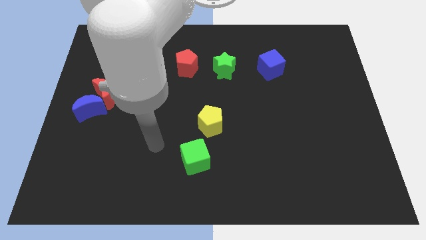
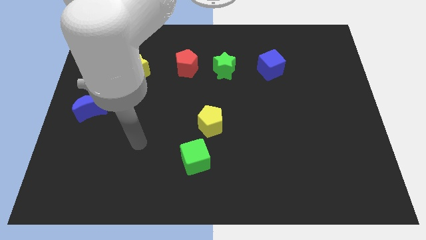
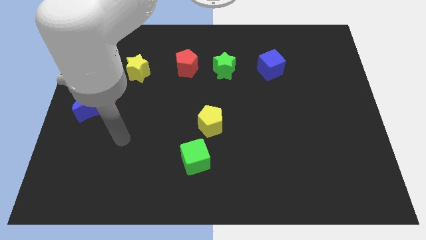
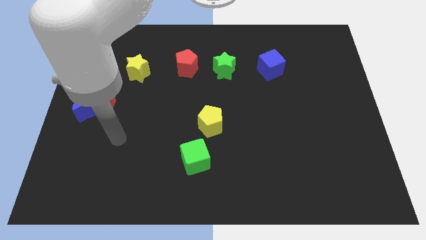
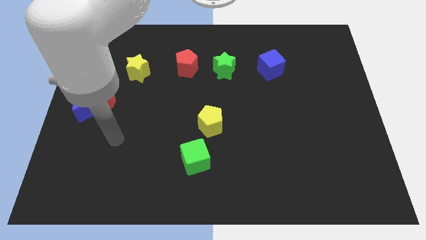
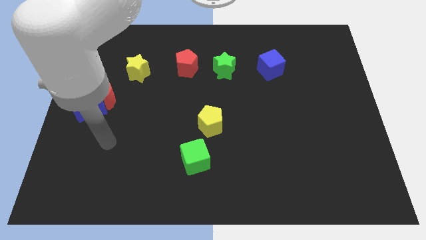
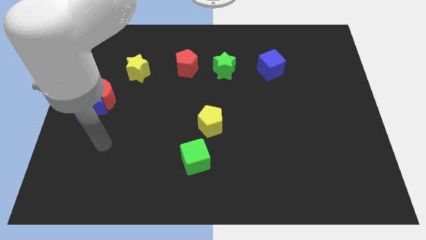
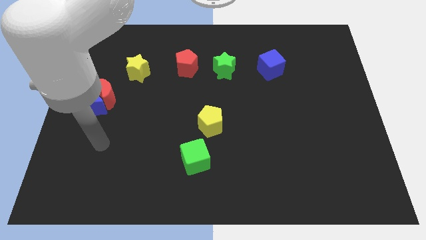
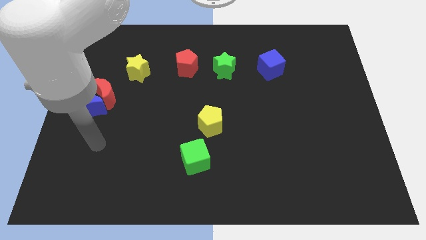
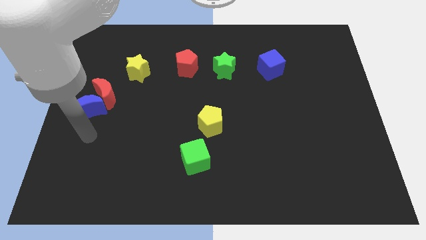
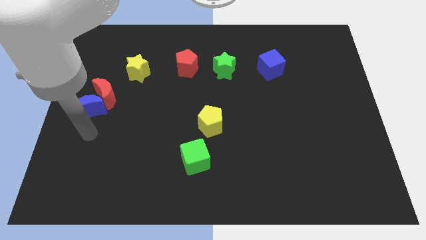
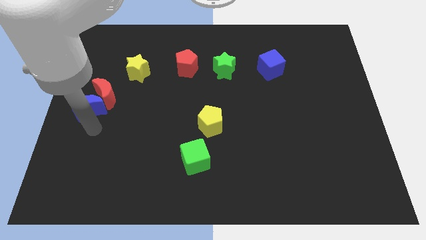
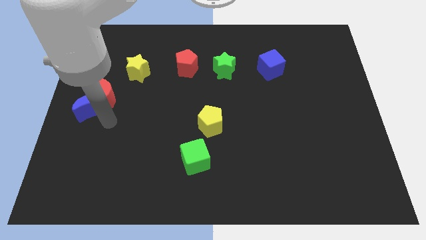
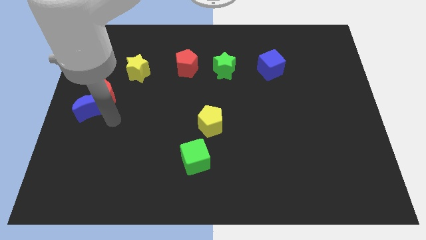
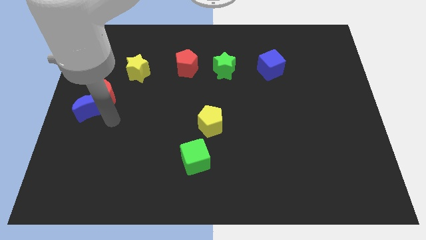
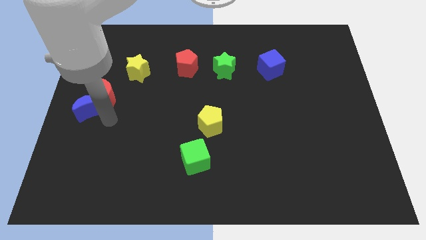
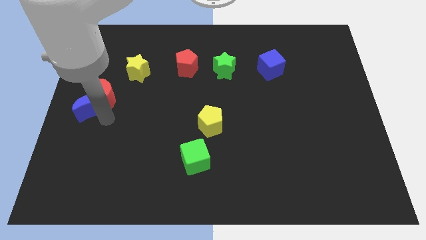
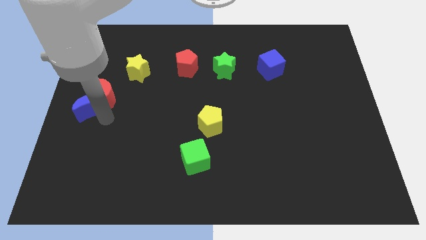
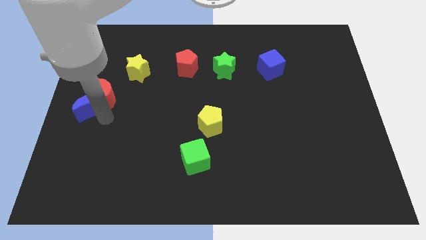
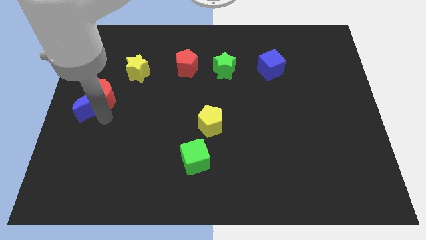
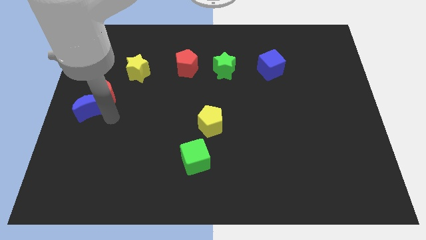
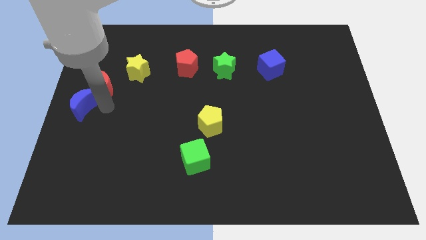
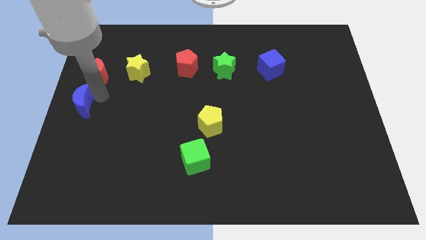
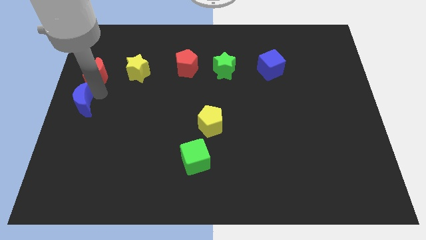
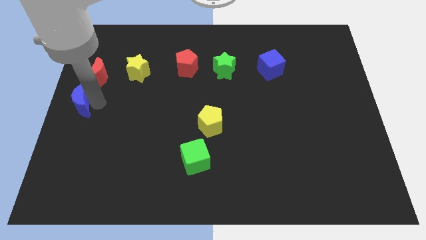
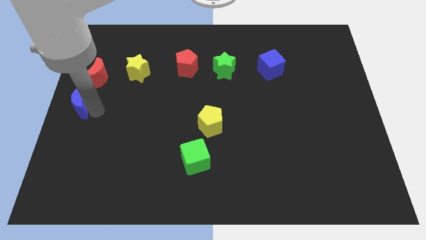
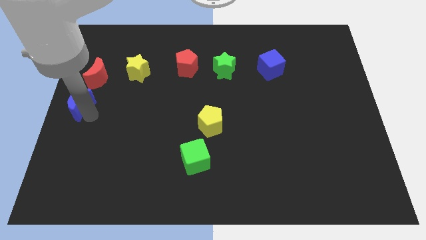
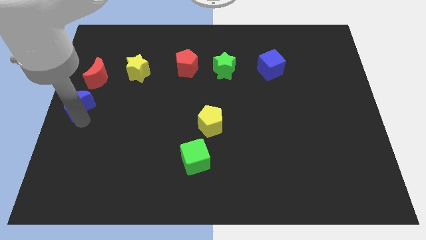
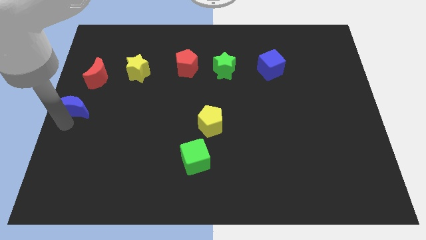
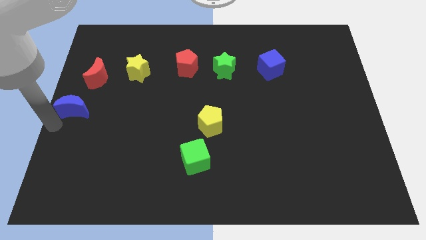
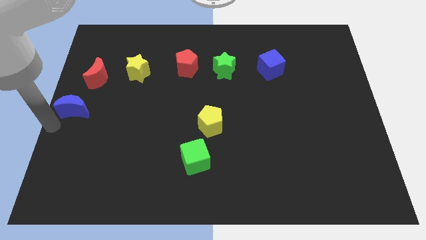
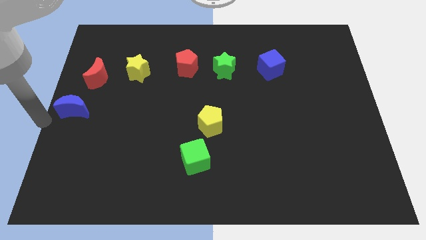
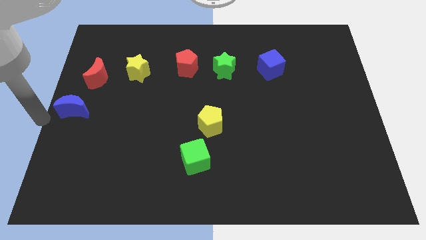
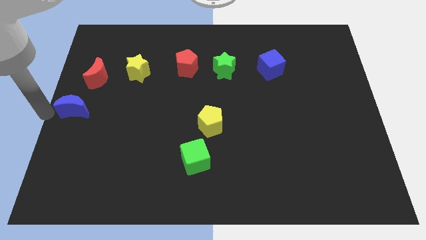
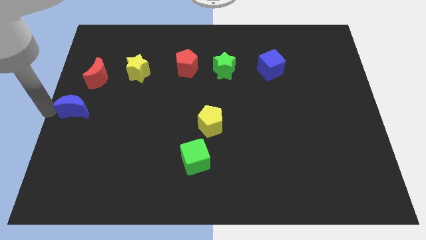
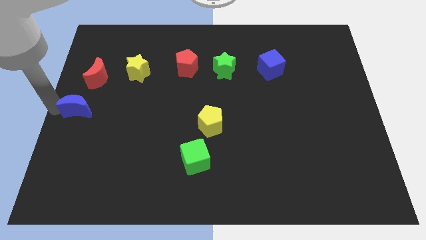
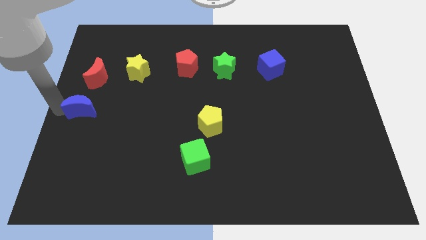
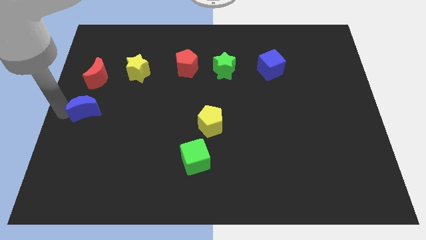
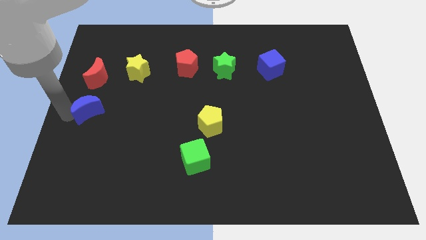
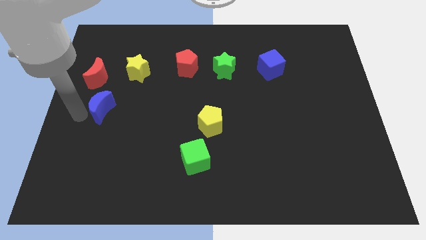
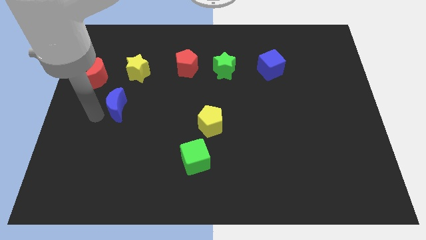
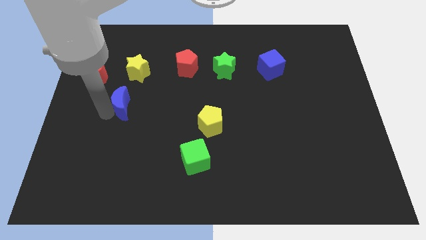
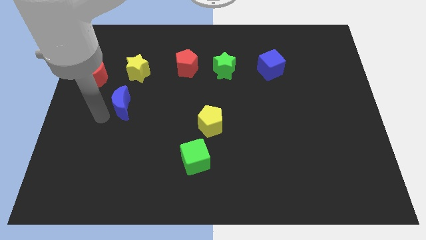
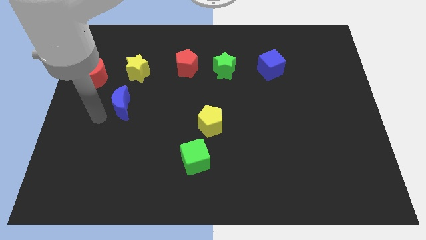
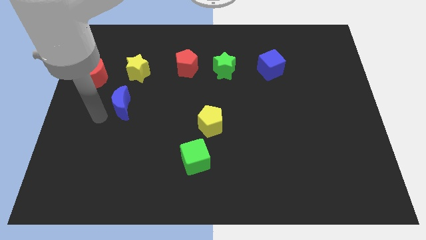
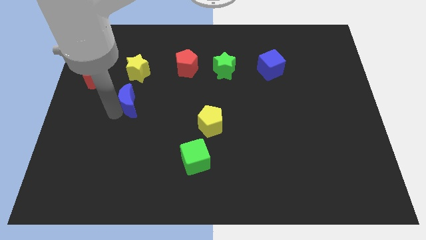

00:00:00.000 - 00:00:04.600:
place the blue crescent below the yellow star

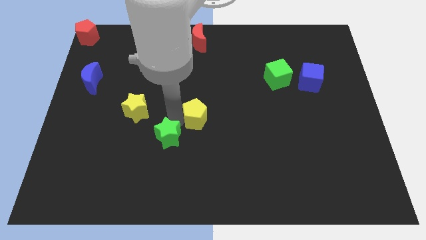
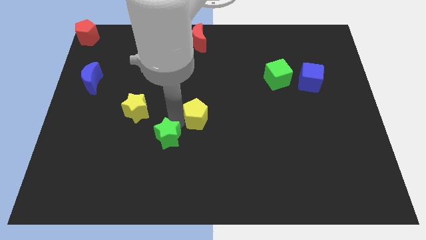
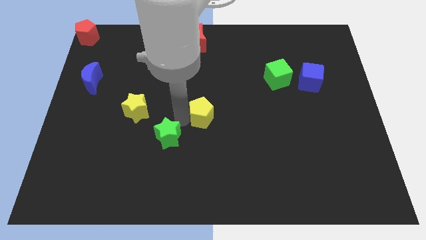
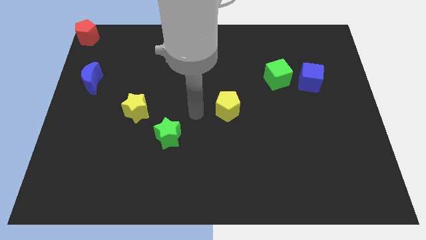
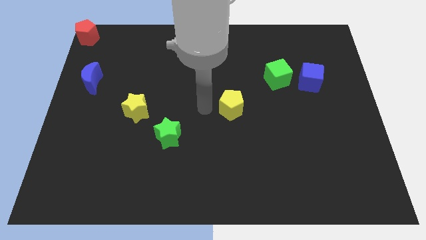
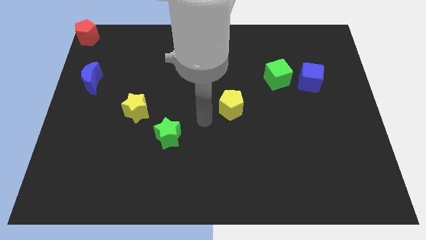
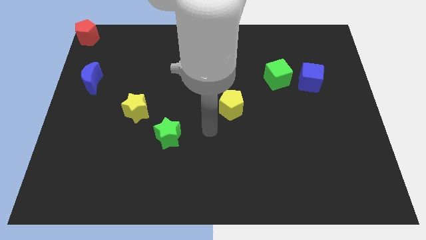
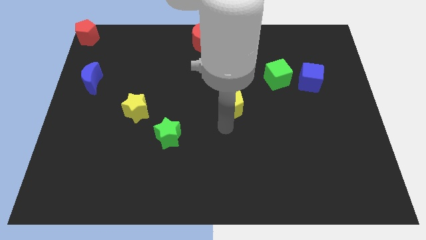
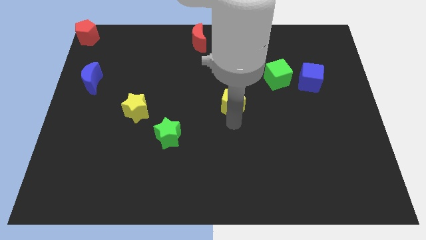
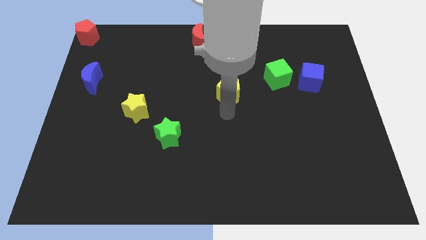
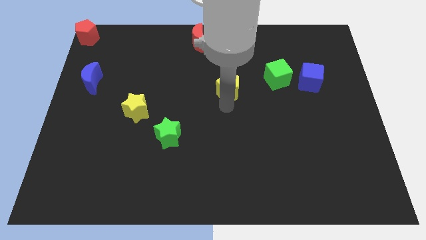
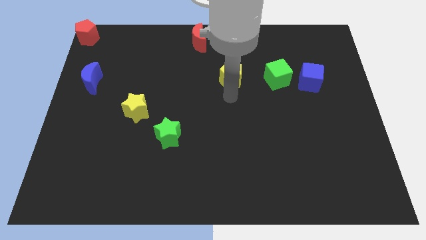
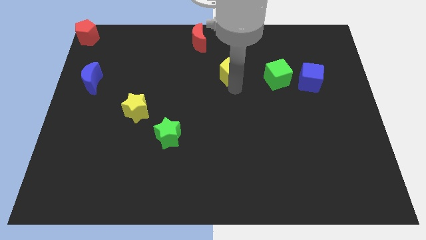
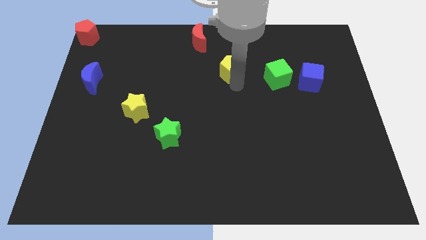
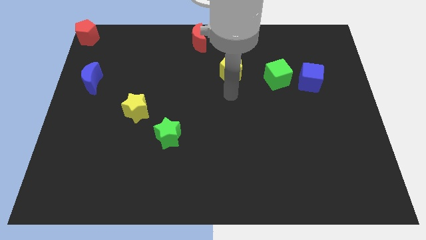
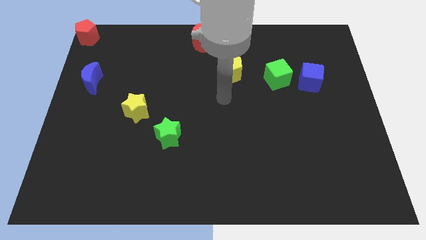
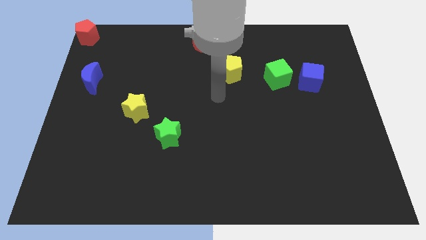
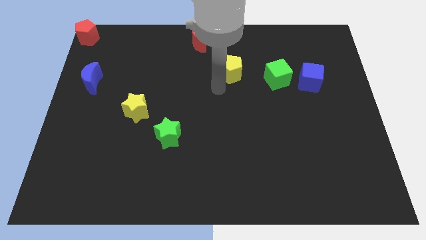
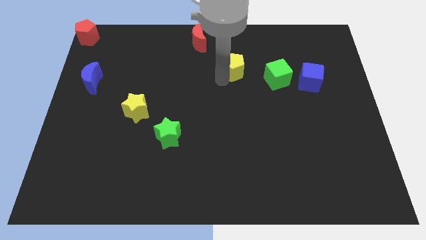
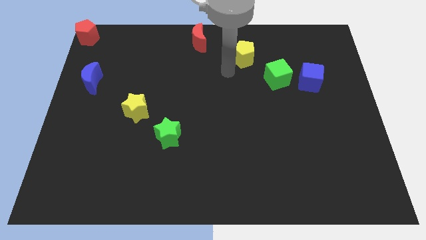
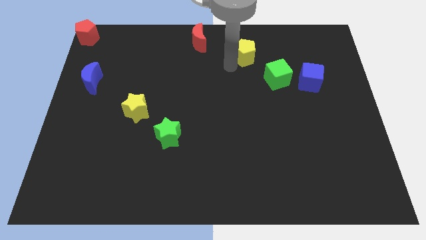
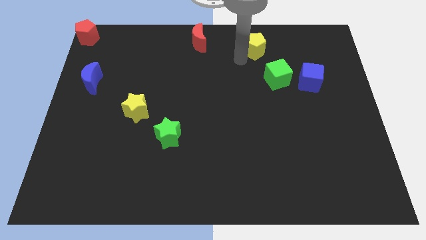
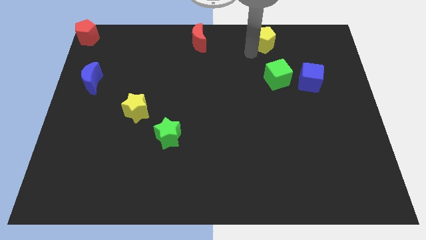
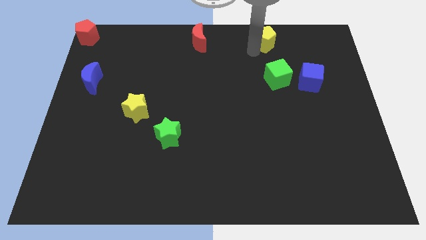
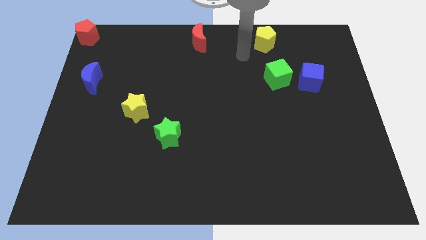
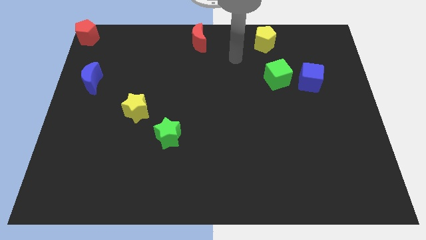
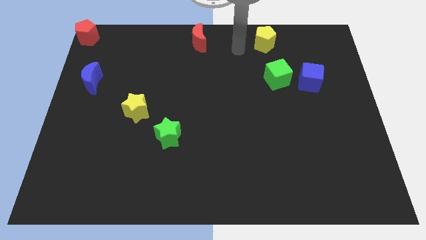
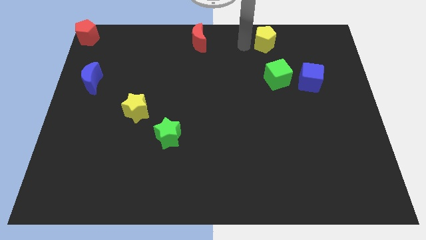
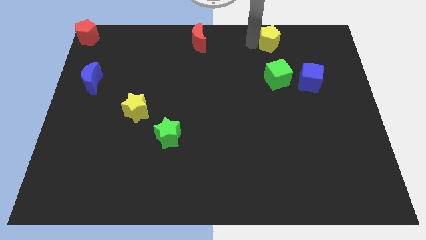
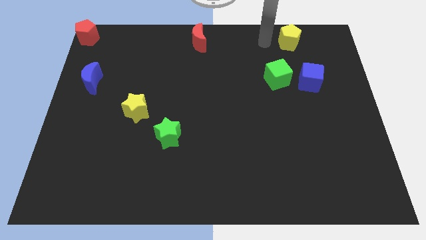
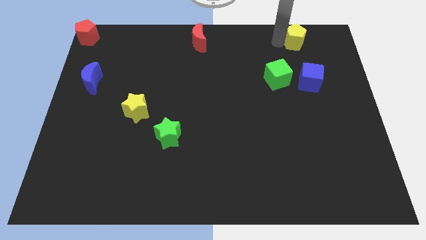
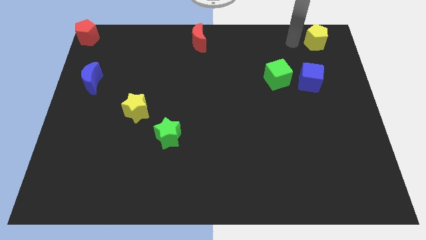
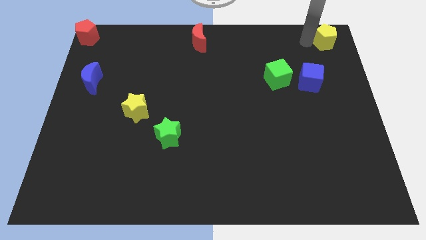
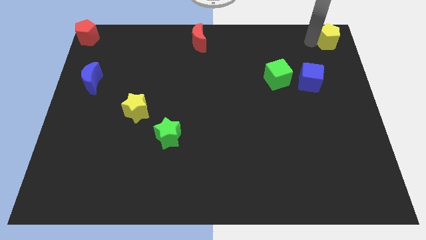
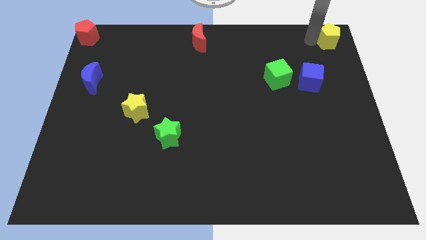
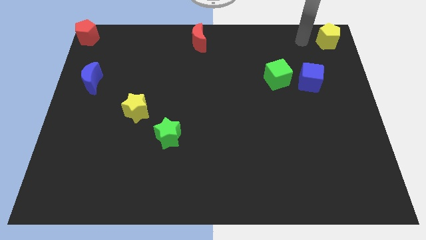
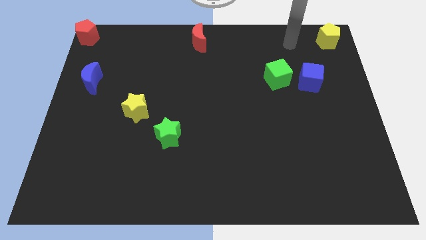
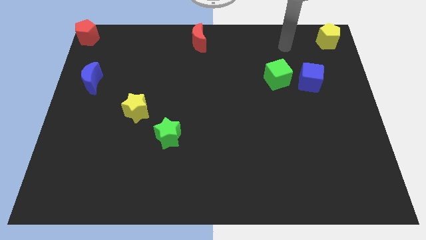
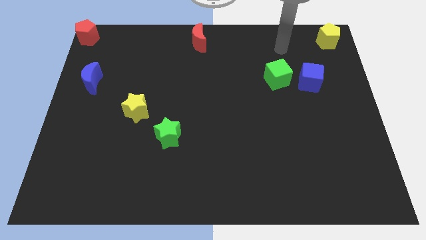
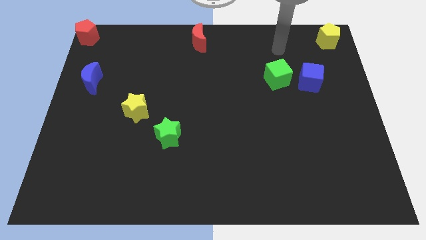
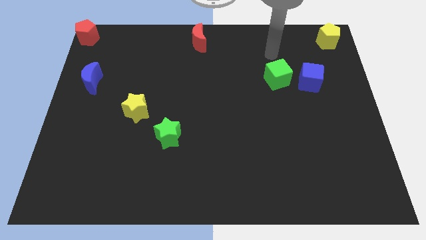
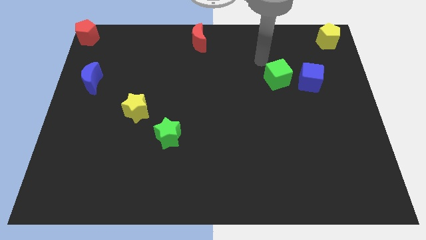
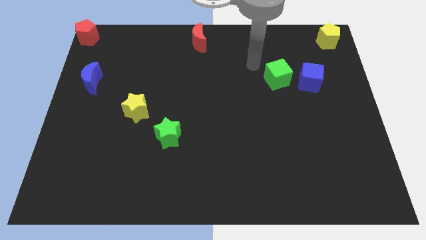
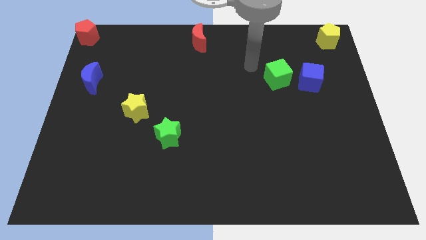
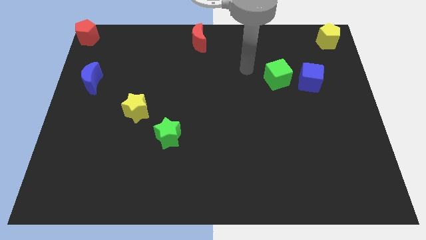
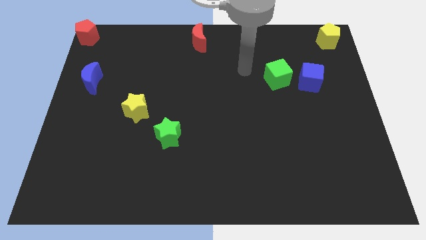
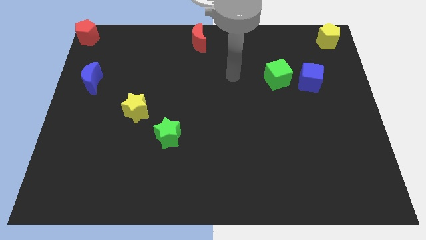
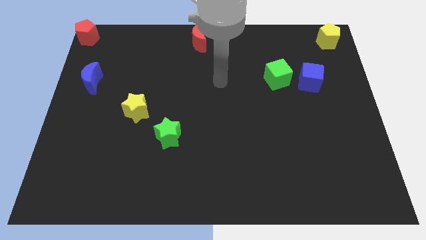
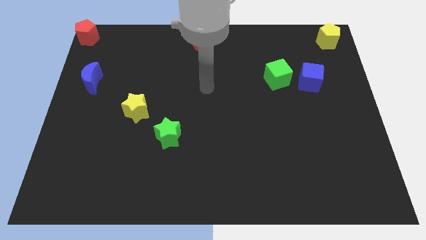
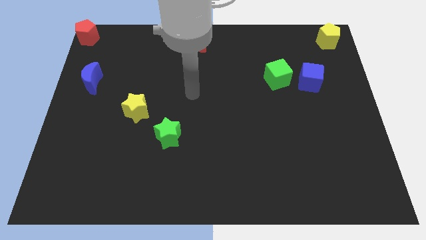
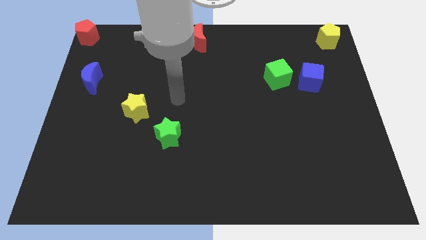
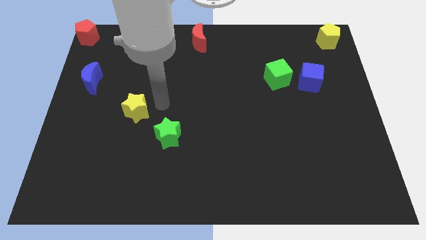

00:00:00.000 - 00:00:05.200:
move the yellow pentagon to the top right corner
